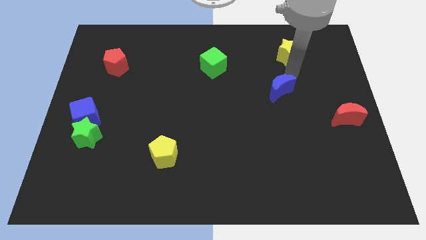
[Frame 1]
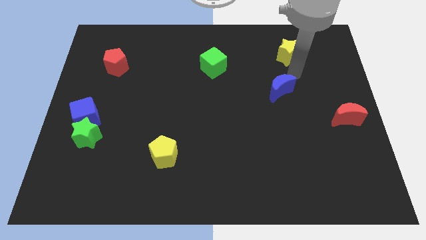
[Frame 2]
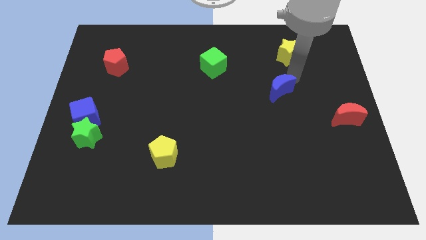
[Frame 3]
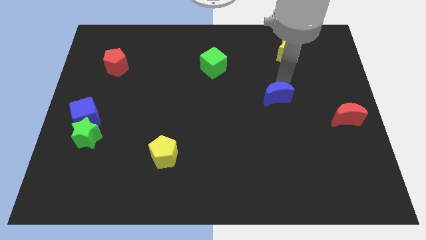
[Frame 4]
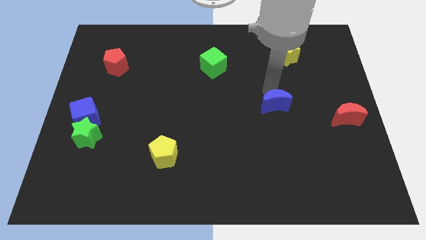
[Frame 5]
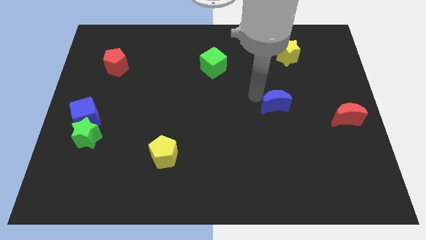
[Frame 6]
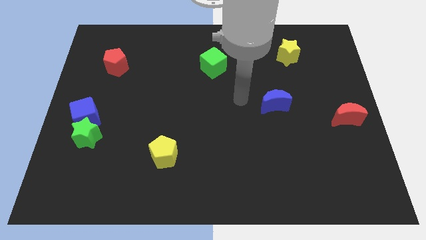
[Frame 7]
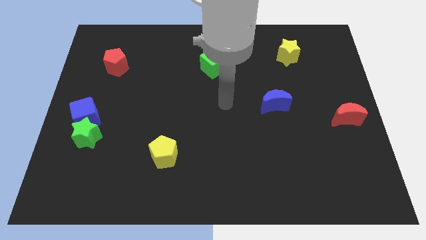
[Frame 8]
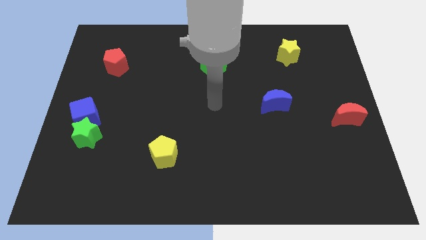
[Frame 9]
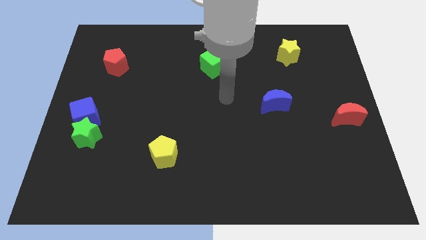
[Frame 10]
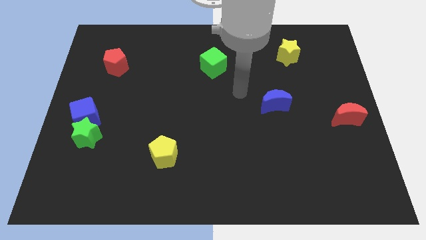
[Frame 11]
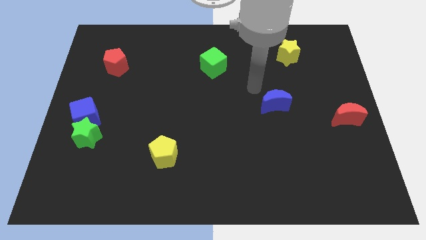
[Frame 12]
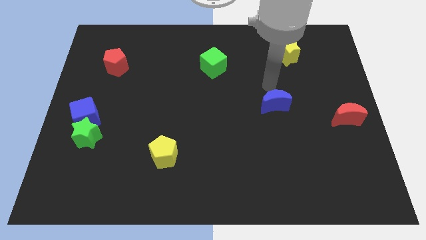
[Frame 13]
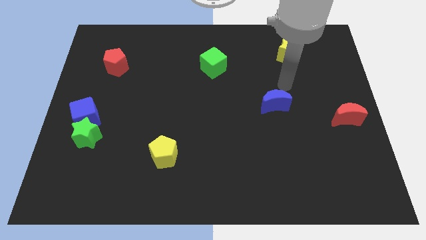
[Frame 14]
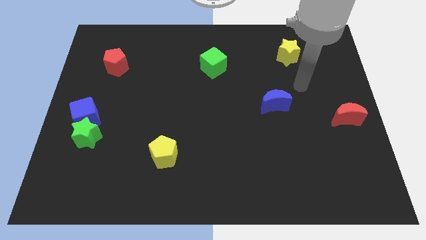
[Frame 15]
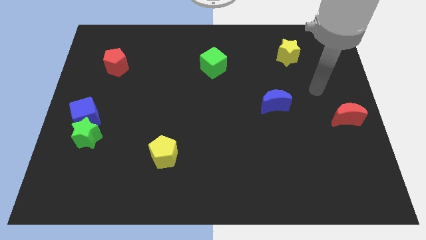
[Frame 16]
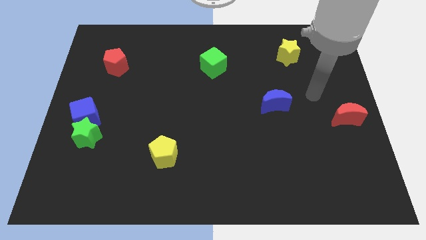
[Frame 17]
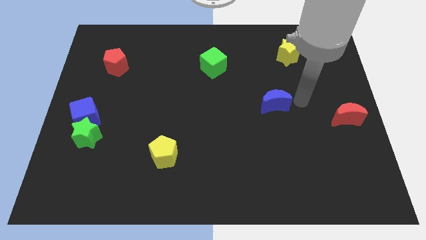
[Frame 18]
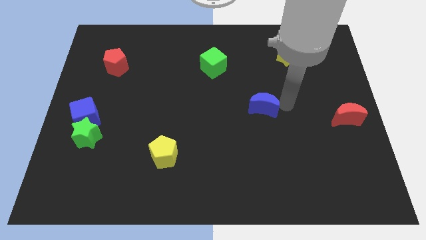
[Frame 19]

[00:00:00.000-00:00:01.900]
slightly move the blue moon to the bottom

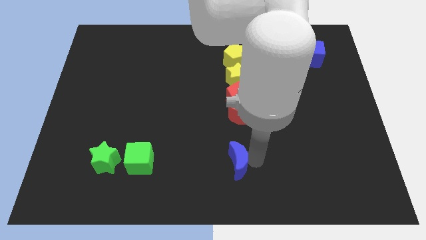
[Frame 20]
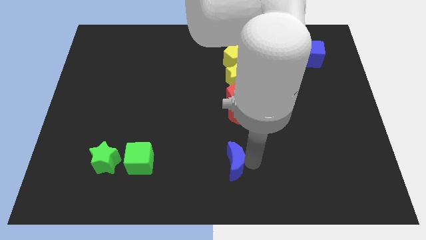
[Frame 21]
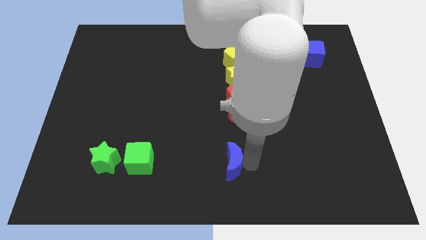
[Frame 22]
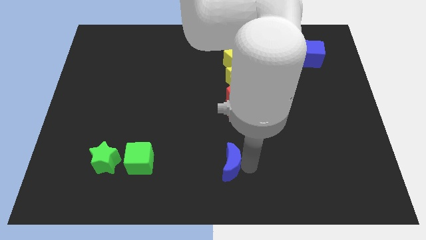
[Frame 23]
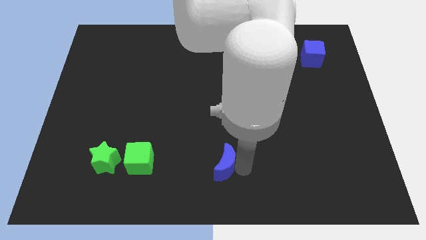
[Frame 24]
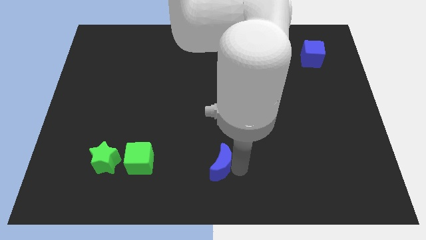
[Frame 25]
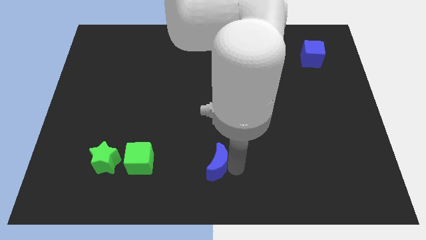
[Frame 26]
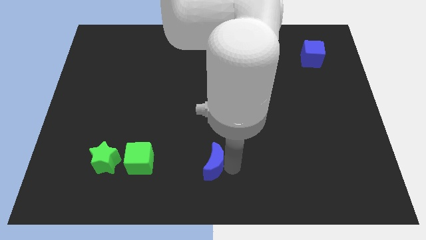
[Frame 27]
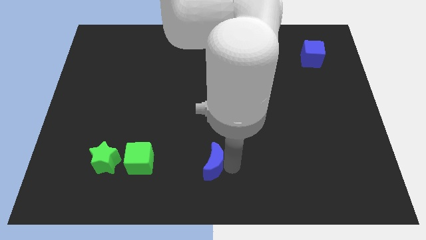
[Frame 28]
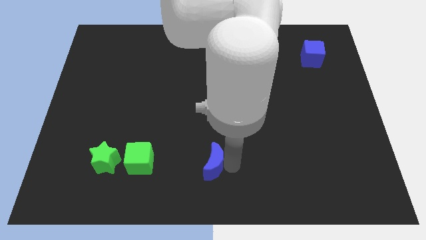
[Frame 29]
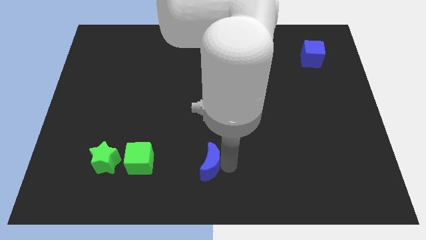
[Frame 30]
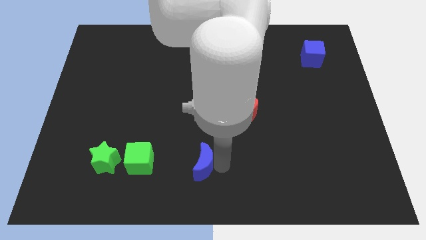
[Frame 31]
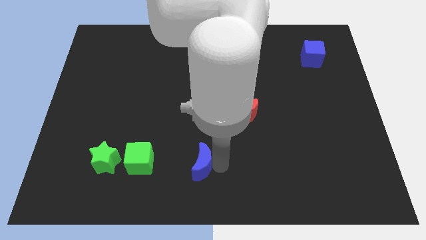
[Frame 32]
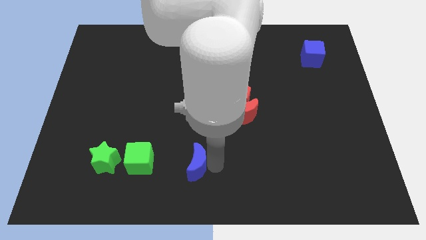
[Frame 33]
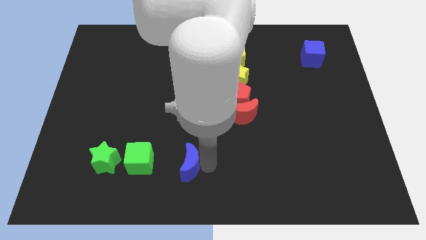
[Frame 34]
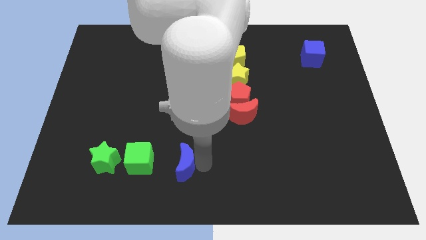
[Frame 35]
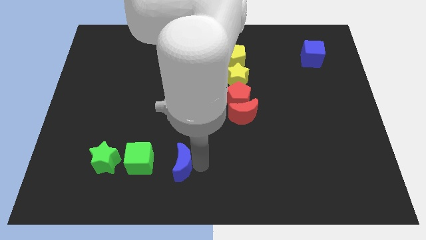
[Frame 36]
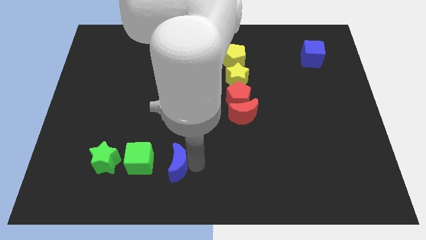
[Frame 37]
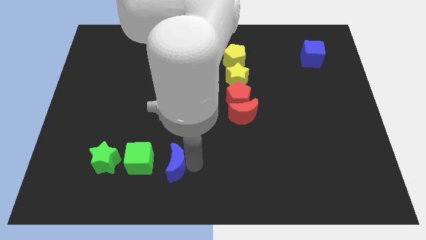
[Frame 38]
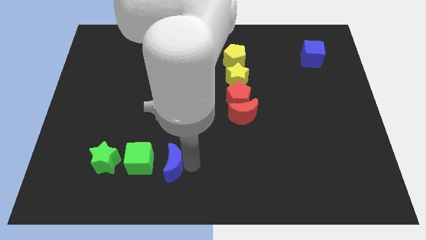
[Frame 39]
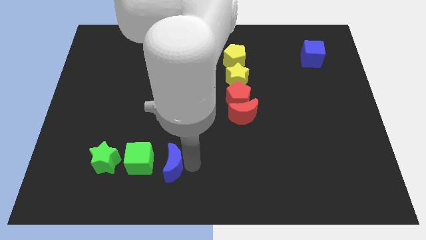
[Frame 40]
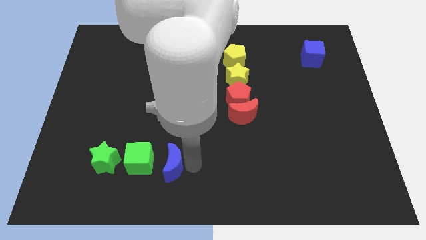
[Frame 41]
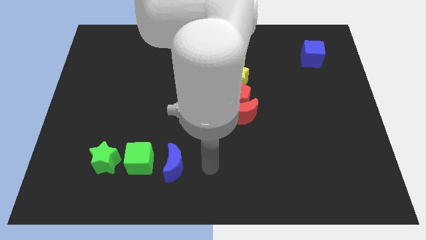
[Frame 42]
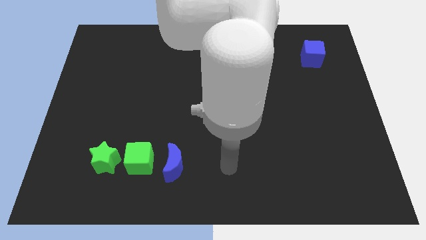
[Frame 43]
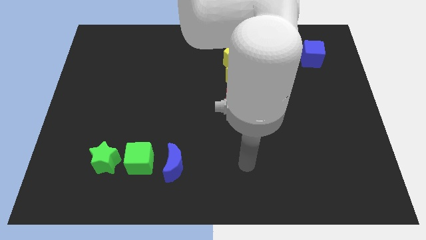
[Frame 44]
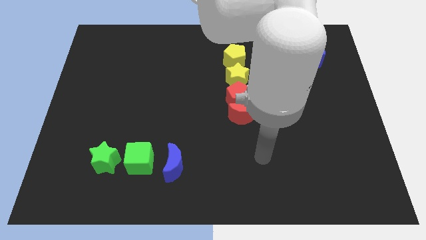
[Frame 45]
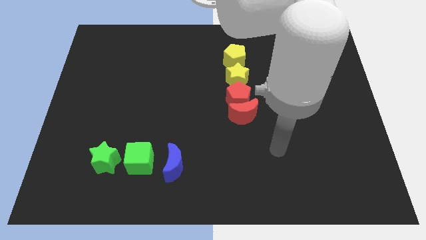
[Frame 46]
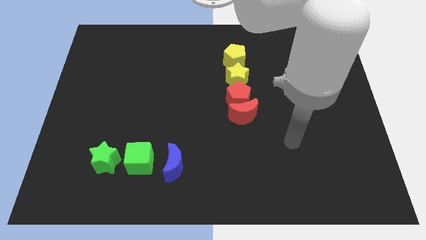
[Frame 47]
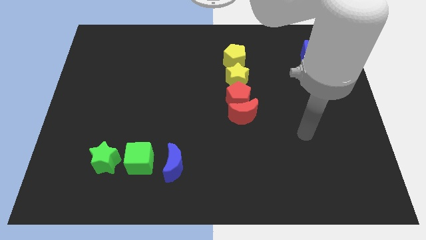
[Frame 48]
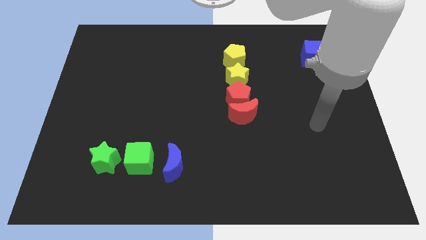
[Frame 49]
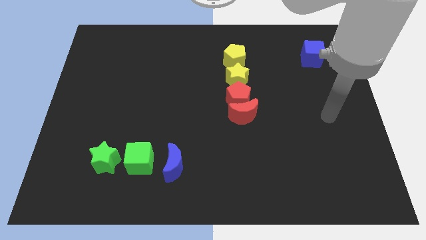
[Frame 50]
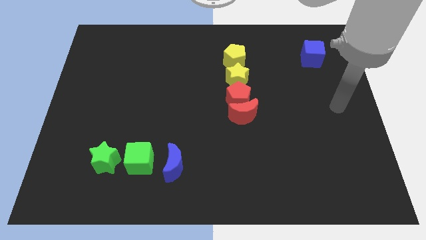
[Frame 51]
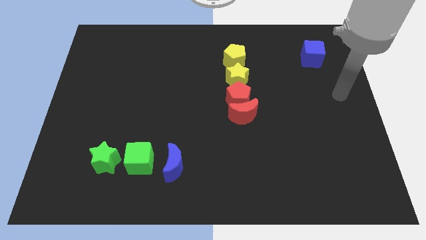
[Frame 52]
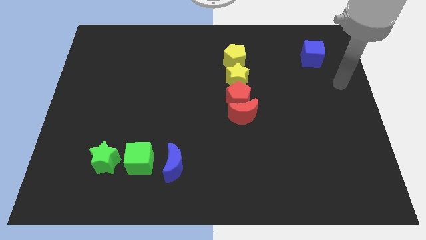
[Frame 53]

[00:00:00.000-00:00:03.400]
place the blue moon to the right of the green cube

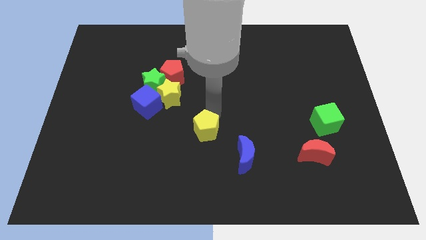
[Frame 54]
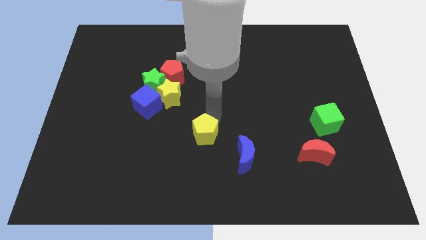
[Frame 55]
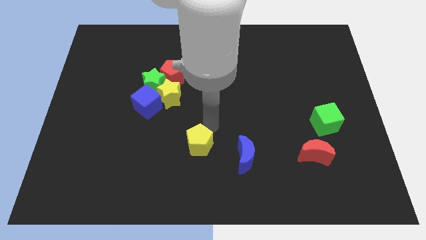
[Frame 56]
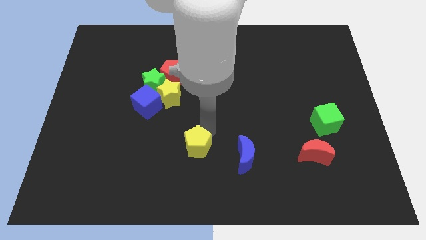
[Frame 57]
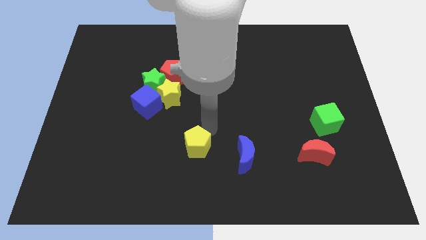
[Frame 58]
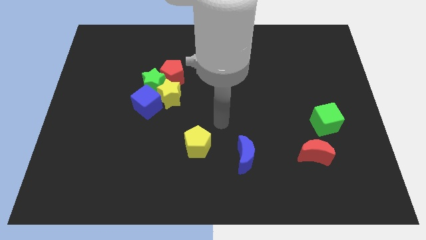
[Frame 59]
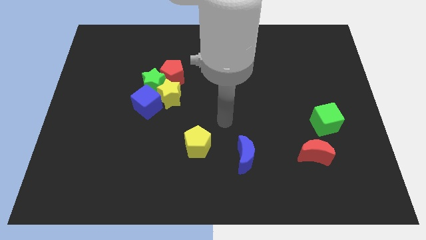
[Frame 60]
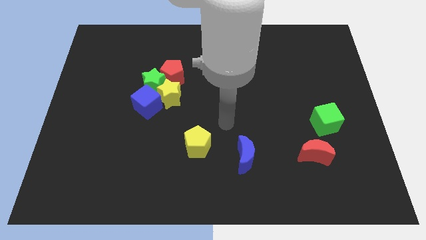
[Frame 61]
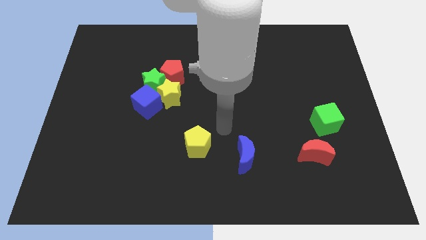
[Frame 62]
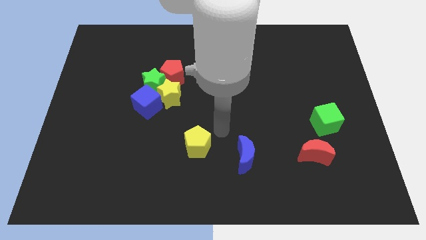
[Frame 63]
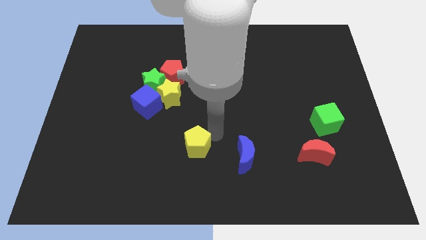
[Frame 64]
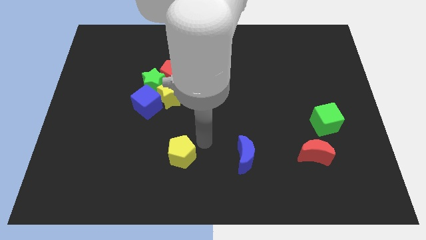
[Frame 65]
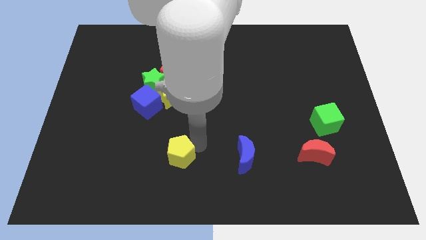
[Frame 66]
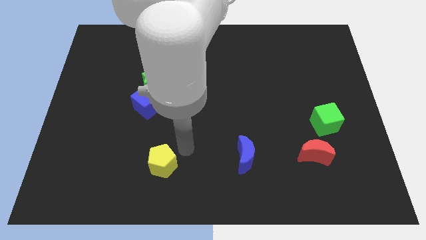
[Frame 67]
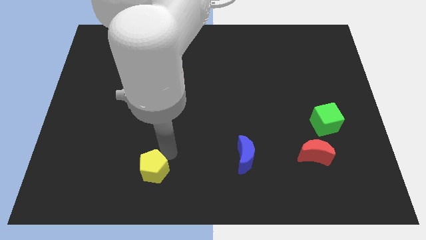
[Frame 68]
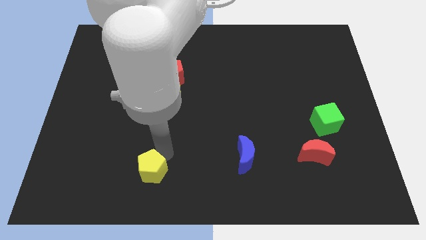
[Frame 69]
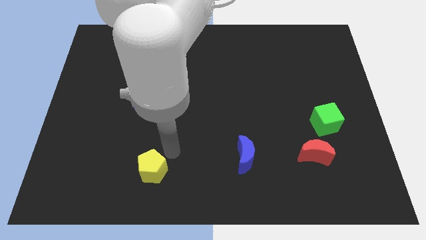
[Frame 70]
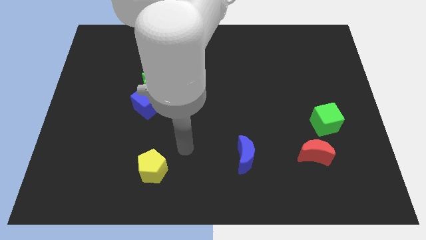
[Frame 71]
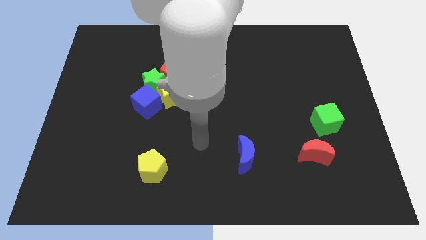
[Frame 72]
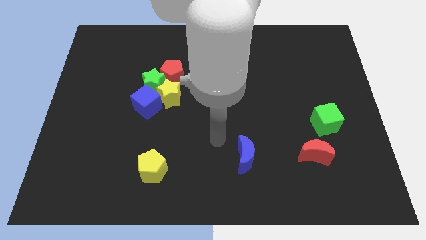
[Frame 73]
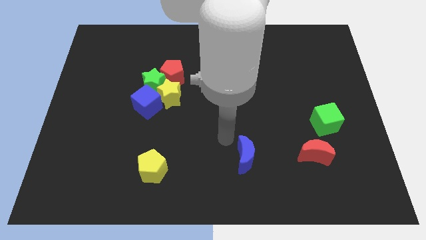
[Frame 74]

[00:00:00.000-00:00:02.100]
move the yellow pentagon vertically below the blue cube

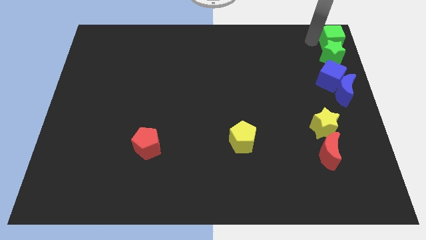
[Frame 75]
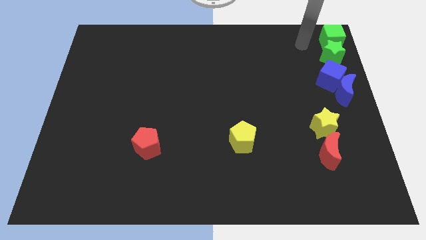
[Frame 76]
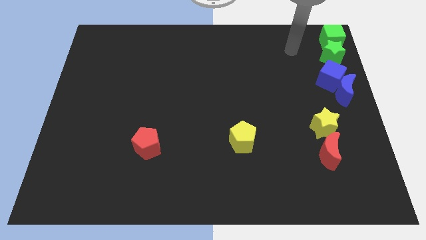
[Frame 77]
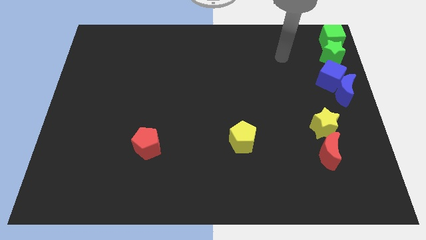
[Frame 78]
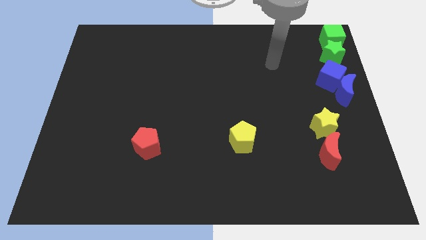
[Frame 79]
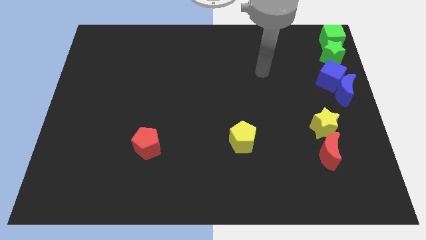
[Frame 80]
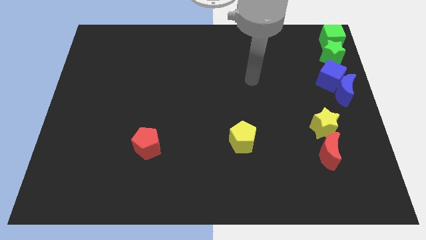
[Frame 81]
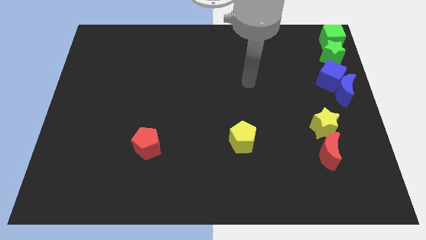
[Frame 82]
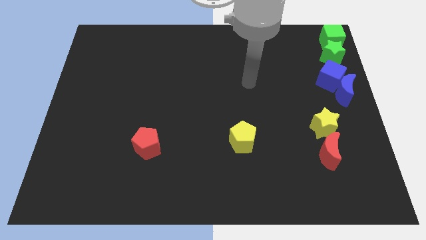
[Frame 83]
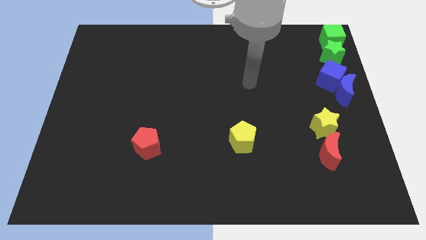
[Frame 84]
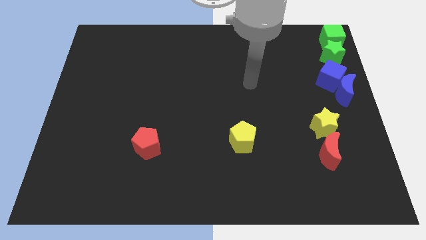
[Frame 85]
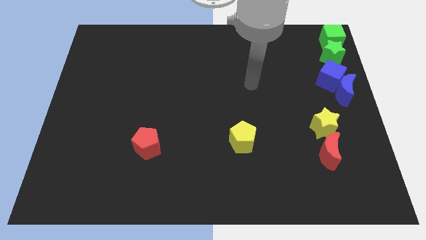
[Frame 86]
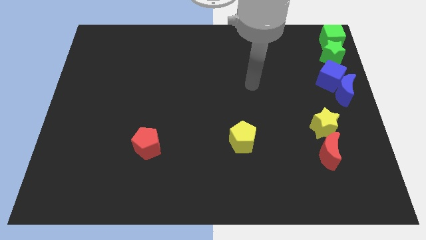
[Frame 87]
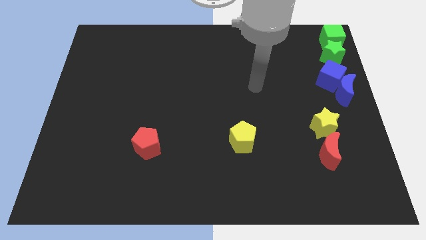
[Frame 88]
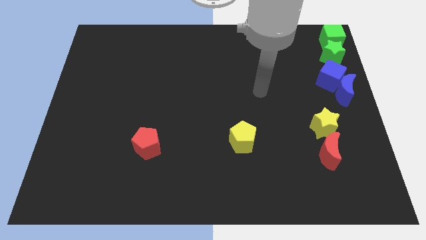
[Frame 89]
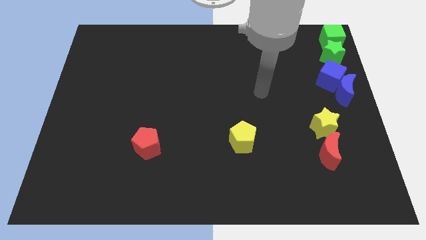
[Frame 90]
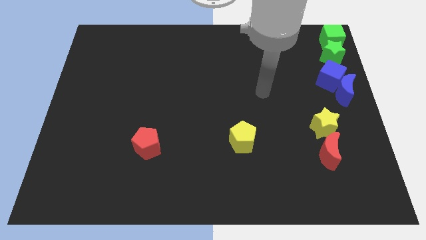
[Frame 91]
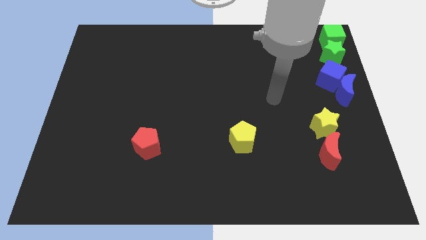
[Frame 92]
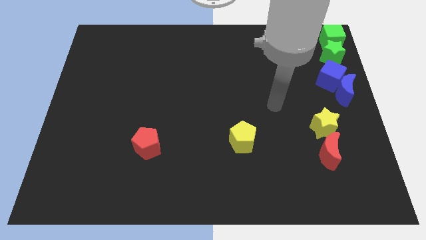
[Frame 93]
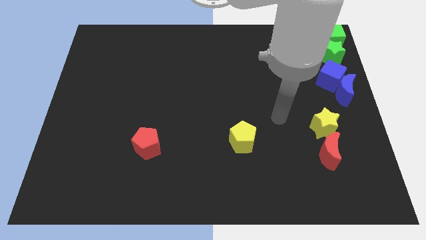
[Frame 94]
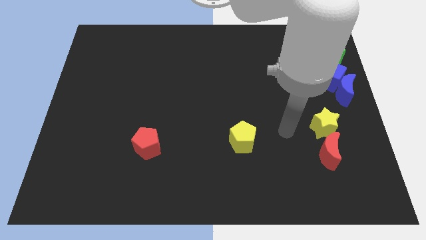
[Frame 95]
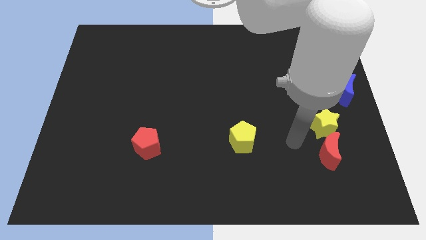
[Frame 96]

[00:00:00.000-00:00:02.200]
place your arm in between the yellow blocks
